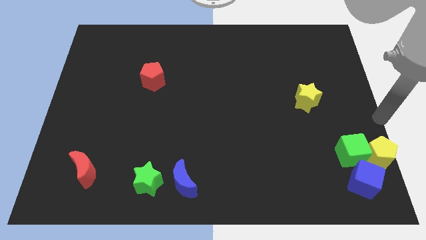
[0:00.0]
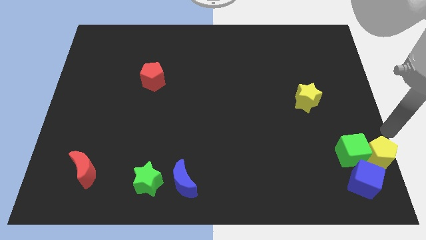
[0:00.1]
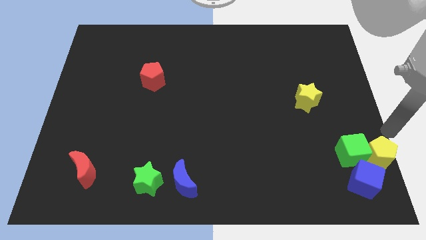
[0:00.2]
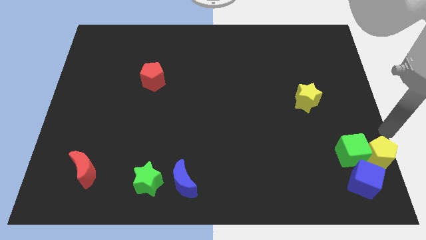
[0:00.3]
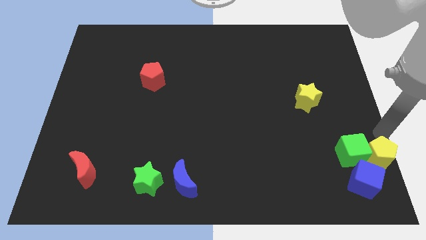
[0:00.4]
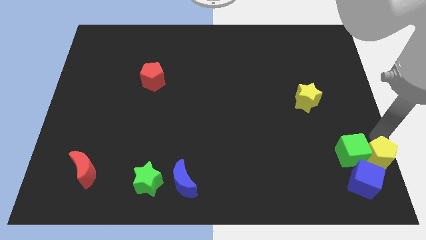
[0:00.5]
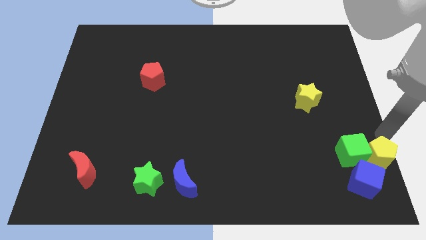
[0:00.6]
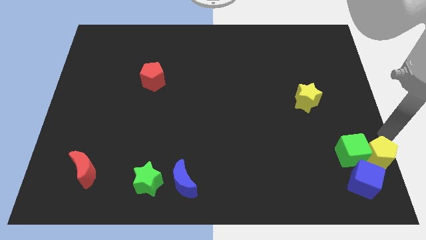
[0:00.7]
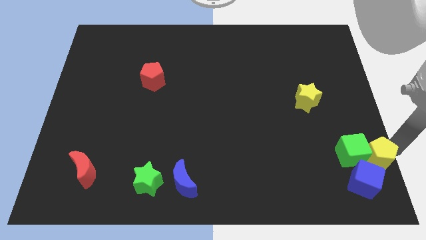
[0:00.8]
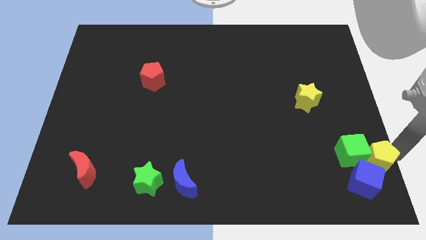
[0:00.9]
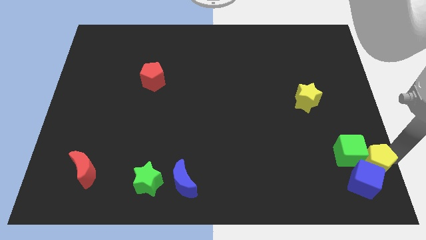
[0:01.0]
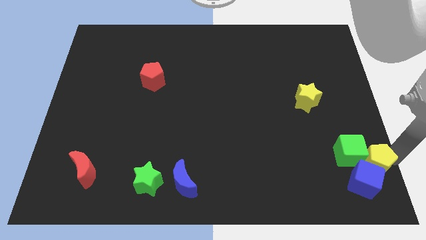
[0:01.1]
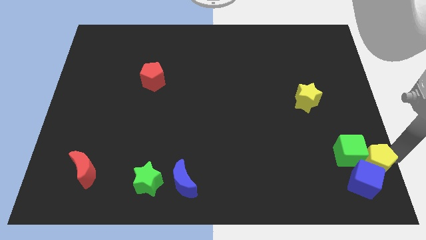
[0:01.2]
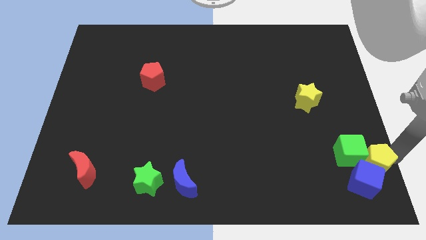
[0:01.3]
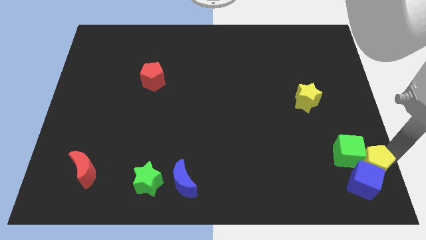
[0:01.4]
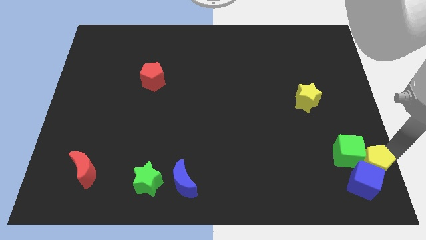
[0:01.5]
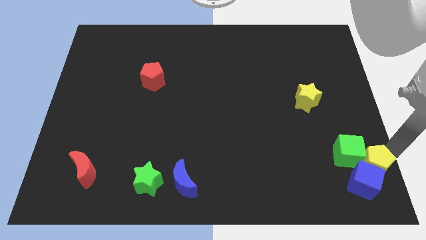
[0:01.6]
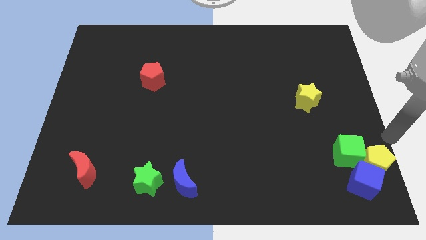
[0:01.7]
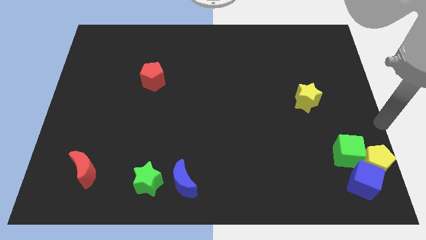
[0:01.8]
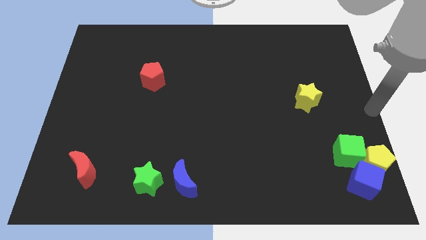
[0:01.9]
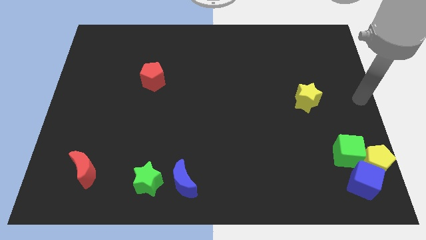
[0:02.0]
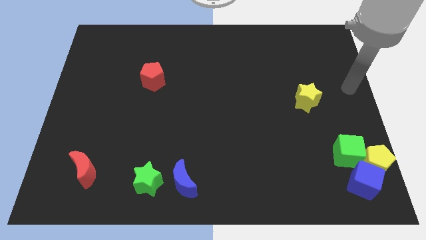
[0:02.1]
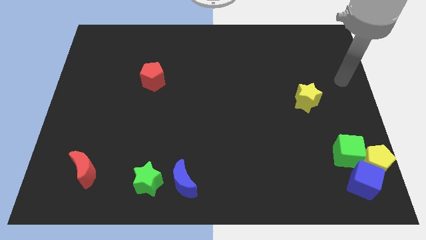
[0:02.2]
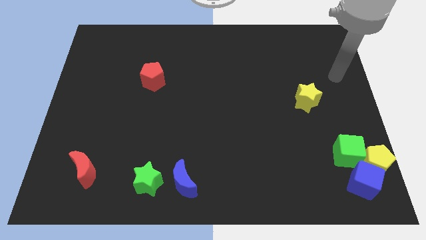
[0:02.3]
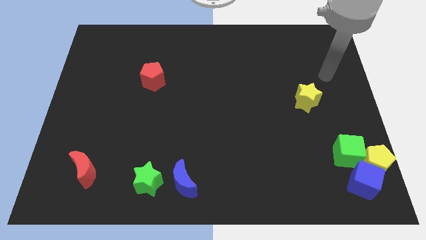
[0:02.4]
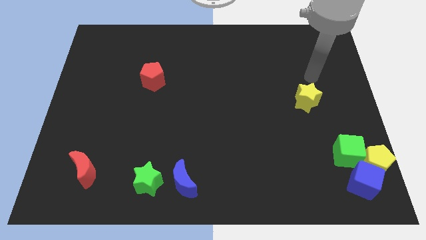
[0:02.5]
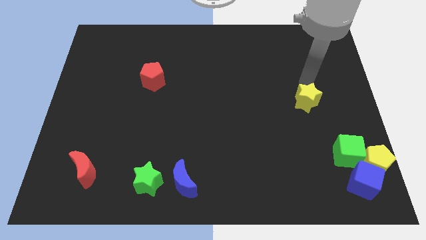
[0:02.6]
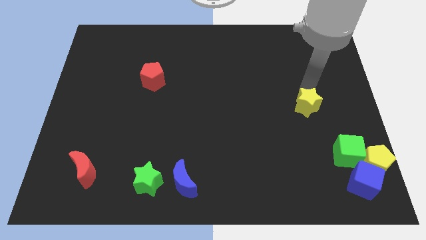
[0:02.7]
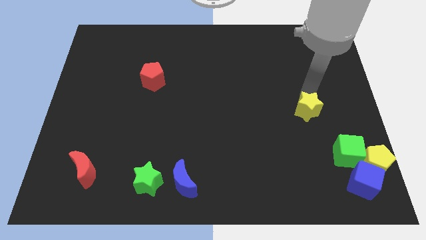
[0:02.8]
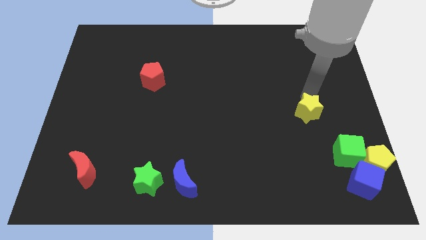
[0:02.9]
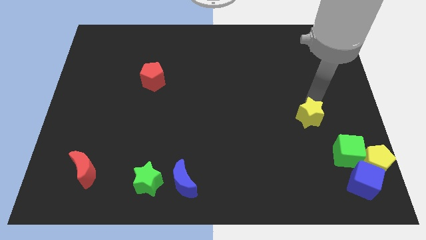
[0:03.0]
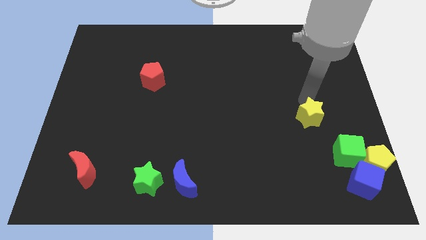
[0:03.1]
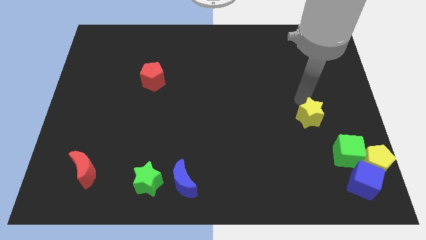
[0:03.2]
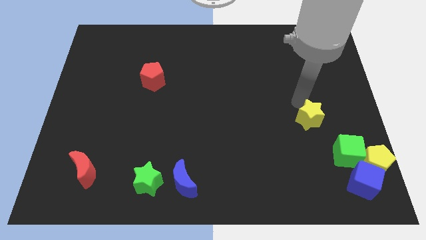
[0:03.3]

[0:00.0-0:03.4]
place the arm above the yellow star

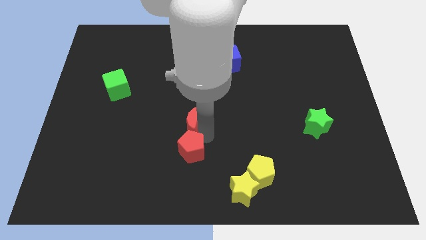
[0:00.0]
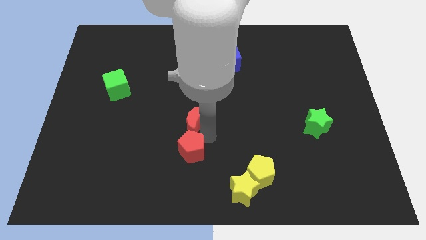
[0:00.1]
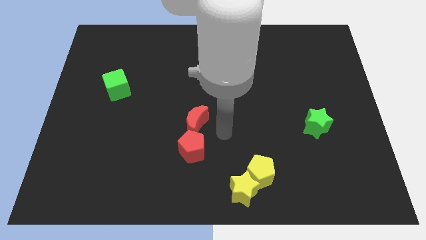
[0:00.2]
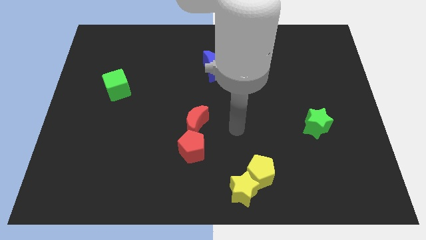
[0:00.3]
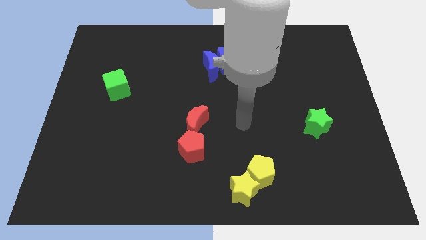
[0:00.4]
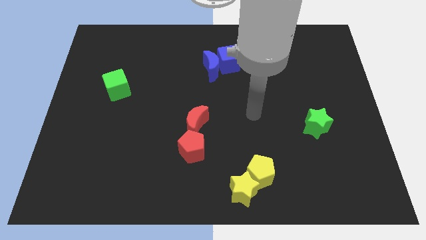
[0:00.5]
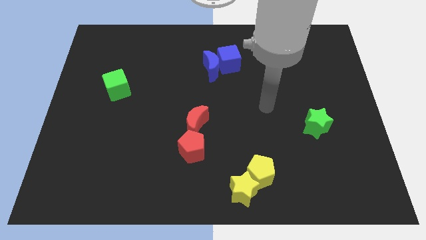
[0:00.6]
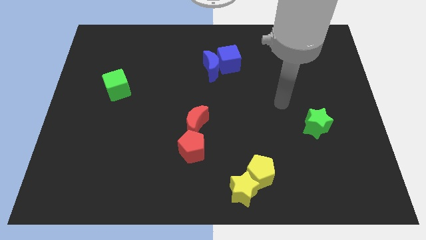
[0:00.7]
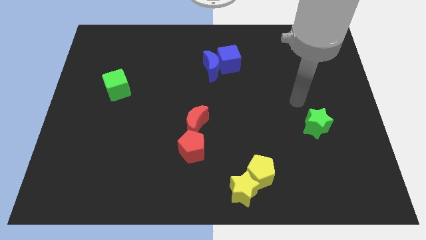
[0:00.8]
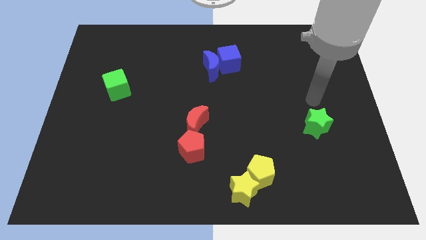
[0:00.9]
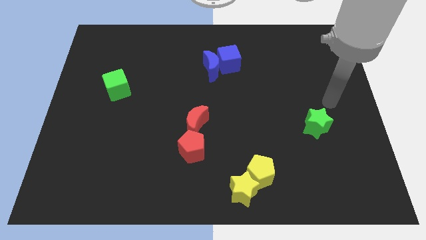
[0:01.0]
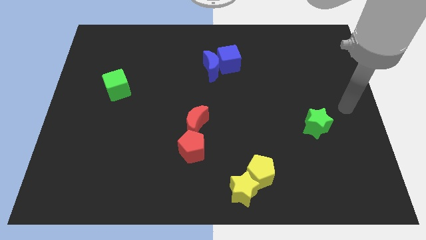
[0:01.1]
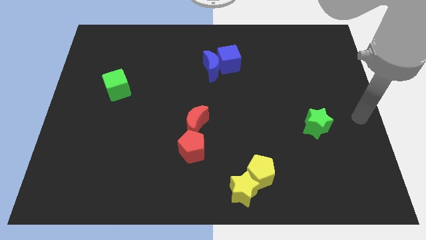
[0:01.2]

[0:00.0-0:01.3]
move your arm away from the red moon

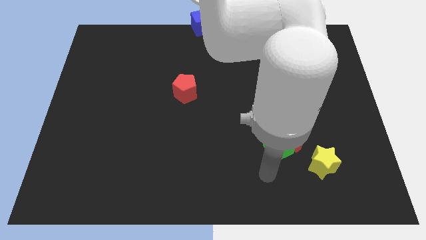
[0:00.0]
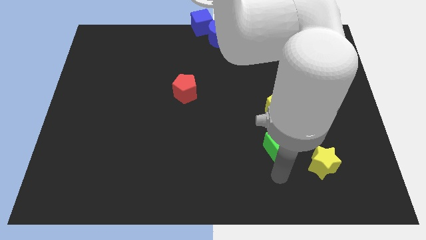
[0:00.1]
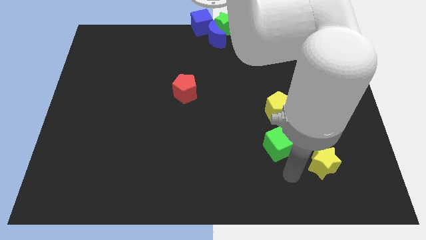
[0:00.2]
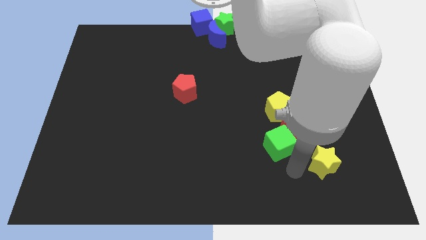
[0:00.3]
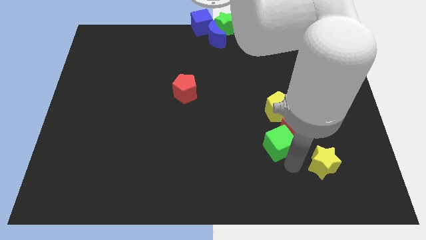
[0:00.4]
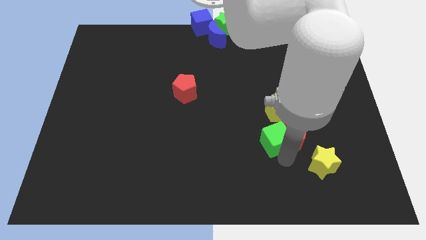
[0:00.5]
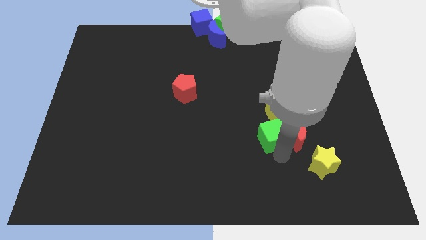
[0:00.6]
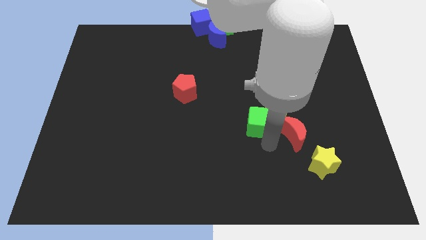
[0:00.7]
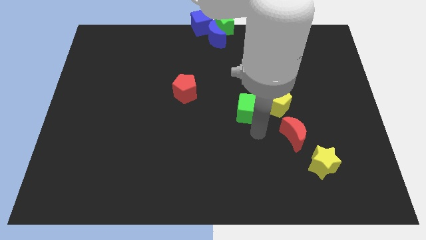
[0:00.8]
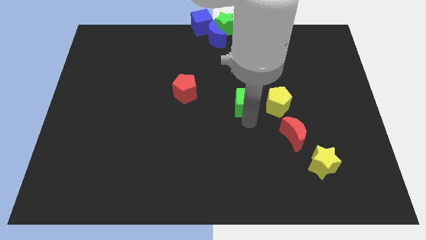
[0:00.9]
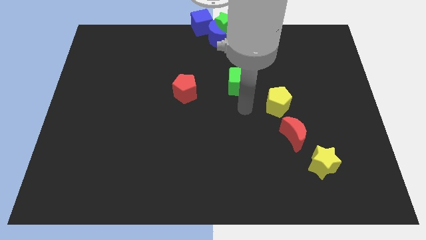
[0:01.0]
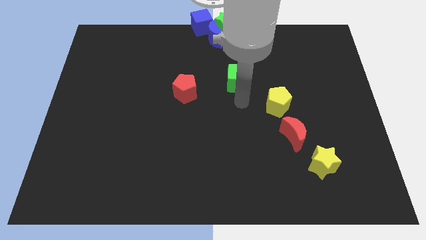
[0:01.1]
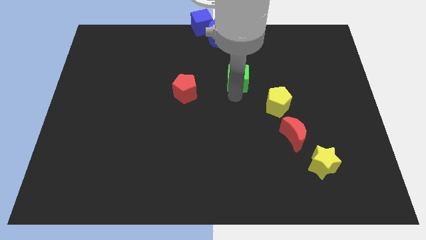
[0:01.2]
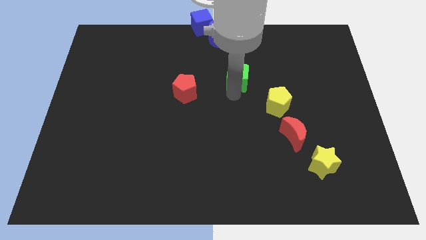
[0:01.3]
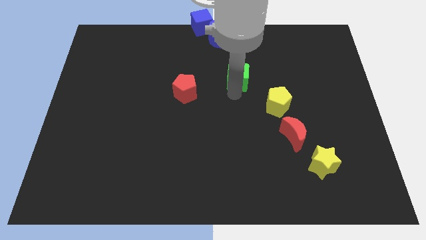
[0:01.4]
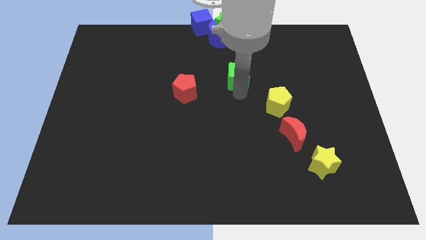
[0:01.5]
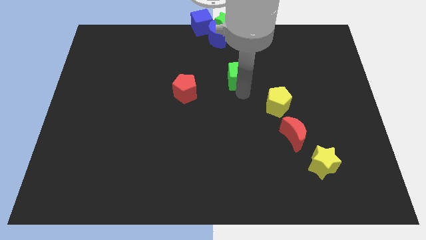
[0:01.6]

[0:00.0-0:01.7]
drag the green cube towards the top

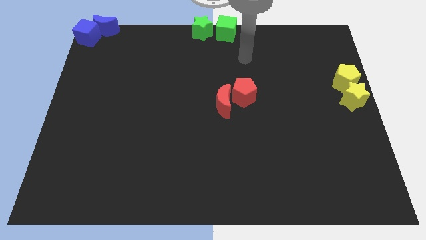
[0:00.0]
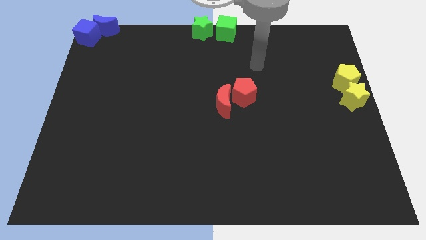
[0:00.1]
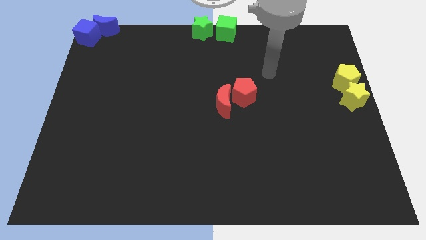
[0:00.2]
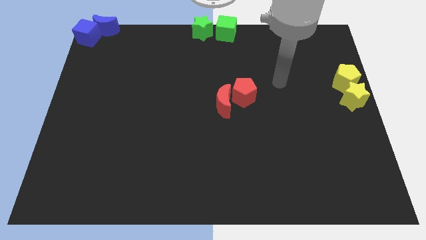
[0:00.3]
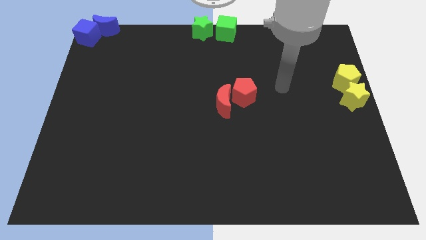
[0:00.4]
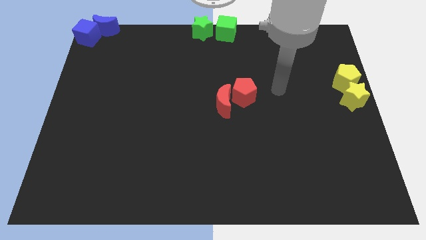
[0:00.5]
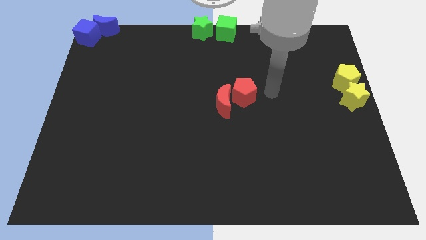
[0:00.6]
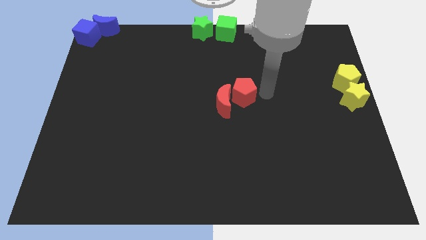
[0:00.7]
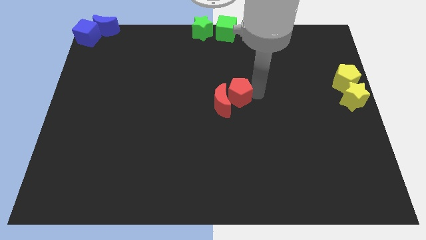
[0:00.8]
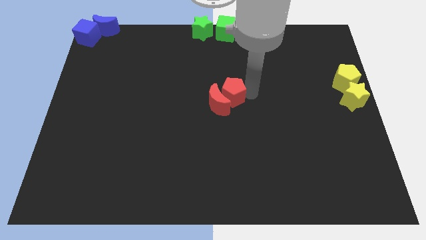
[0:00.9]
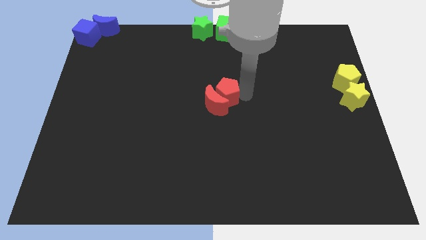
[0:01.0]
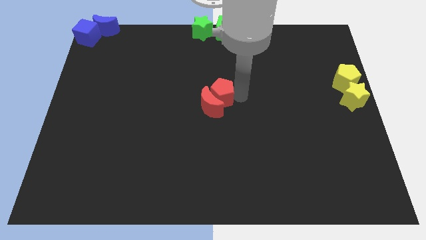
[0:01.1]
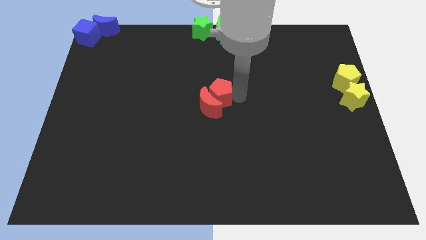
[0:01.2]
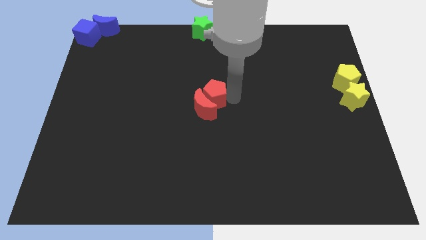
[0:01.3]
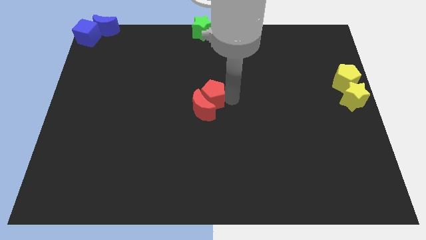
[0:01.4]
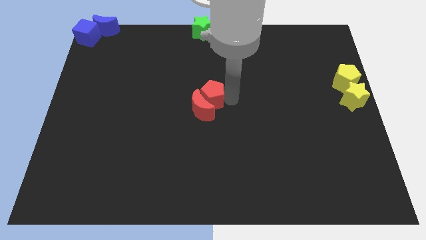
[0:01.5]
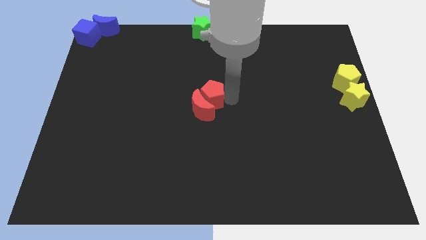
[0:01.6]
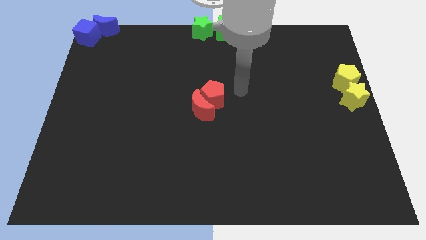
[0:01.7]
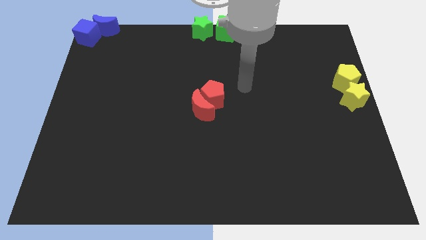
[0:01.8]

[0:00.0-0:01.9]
place the red blocks at the center of the board

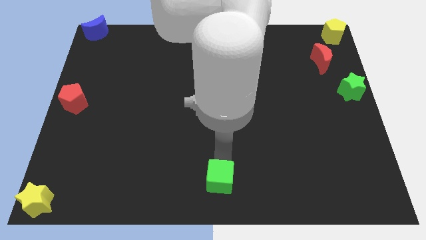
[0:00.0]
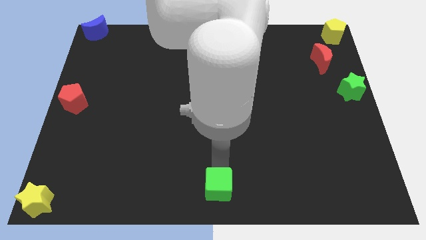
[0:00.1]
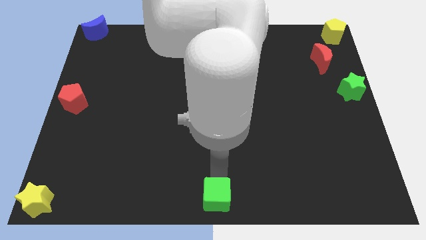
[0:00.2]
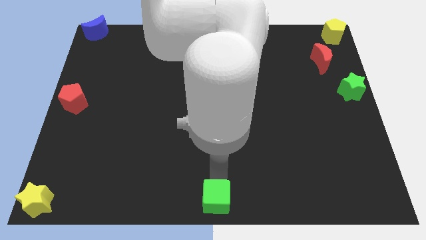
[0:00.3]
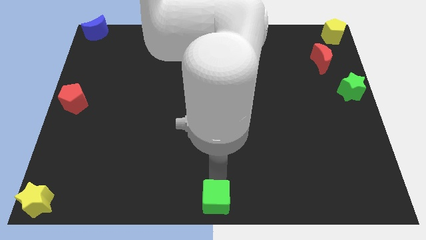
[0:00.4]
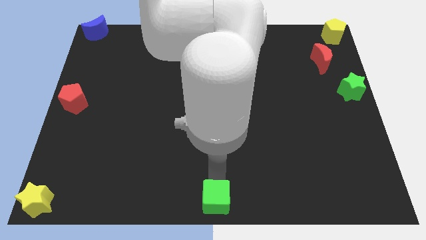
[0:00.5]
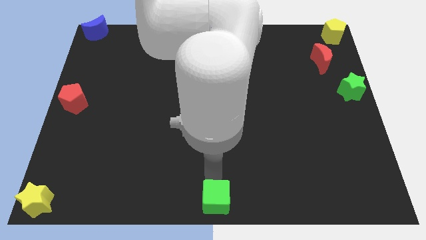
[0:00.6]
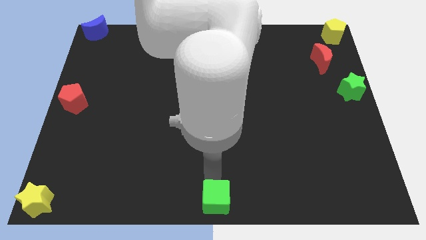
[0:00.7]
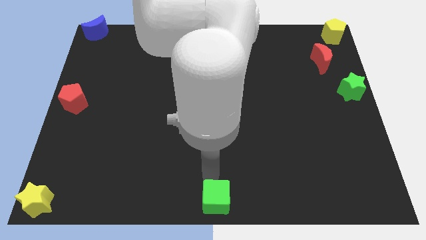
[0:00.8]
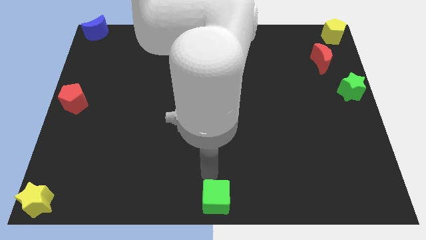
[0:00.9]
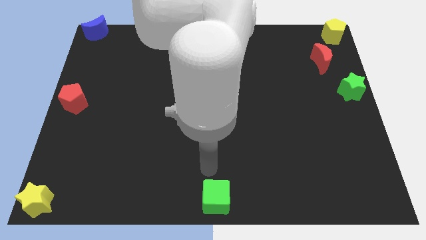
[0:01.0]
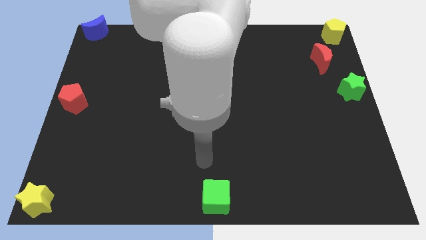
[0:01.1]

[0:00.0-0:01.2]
put the green cube parallel to yellow star
